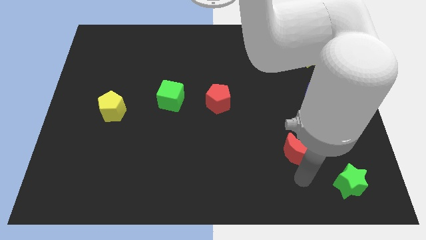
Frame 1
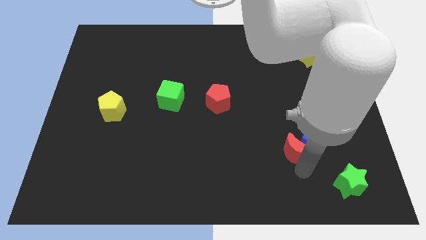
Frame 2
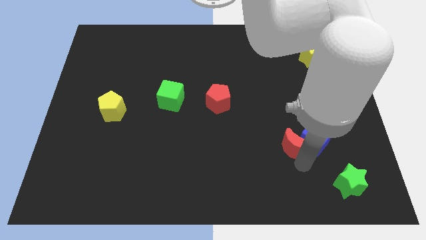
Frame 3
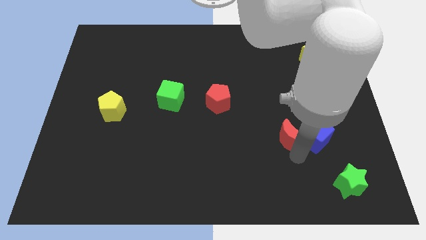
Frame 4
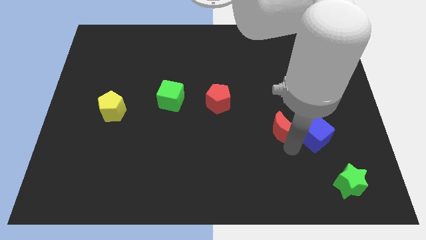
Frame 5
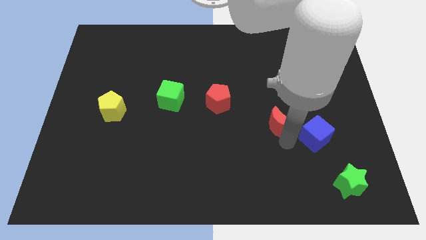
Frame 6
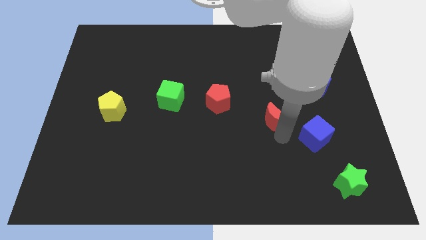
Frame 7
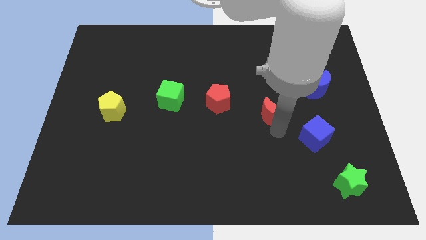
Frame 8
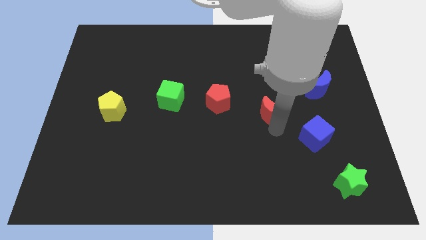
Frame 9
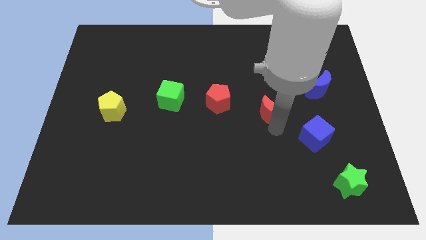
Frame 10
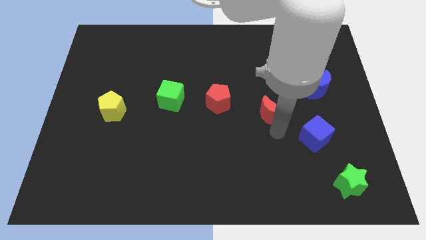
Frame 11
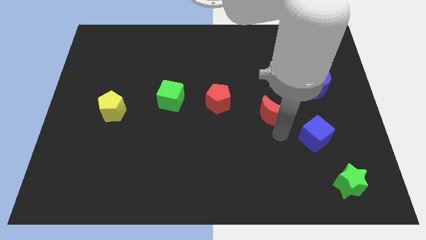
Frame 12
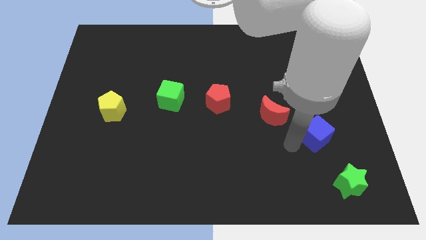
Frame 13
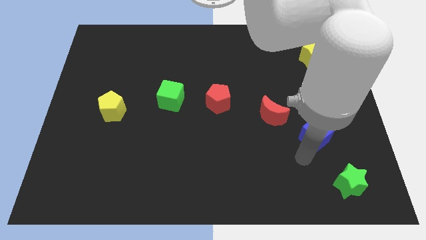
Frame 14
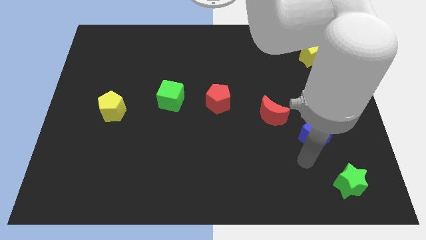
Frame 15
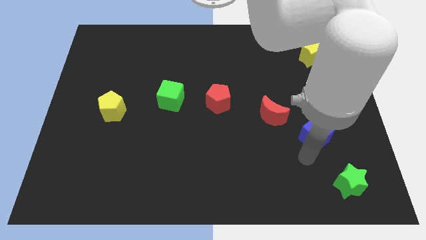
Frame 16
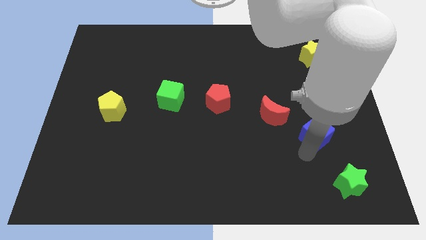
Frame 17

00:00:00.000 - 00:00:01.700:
move the red moon diagonally to the blue cube

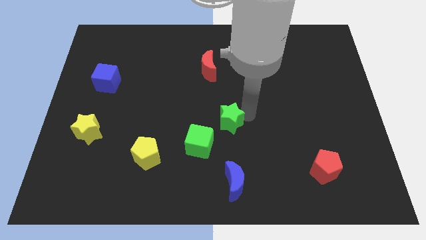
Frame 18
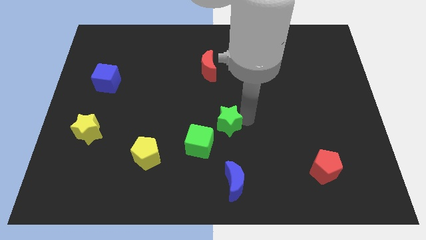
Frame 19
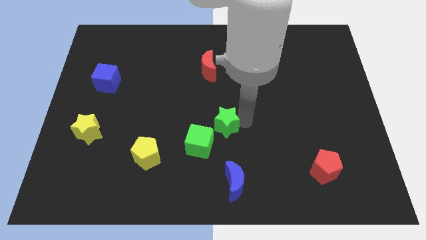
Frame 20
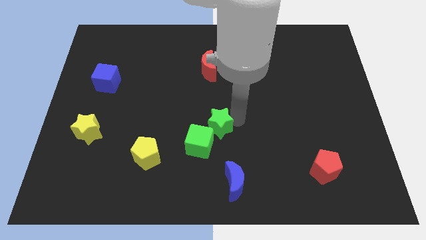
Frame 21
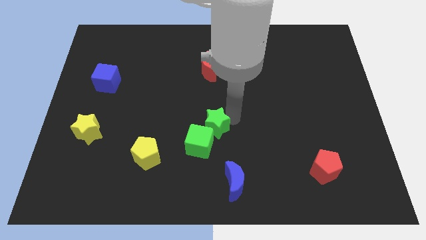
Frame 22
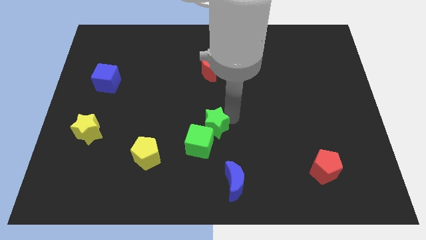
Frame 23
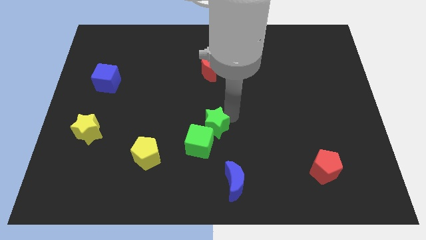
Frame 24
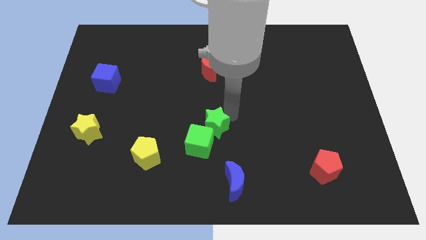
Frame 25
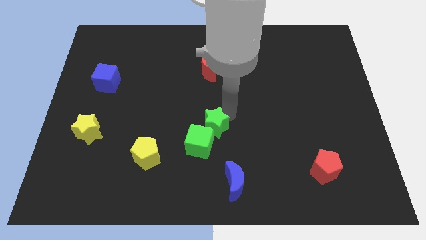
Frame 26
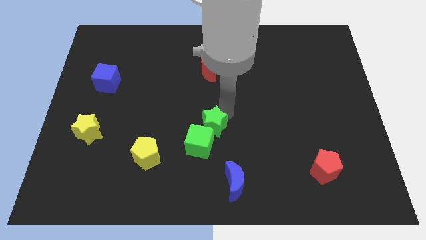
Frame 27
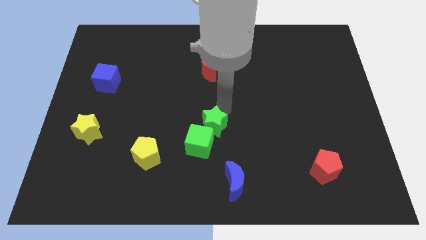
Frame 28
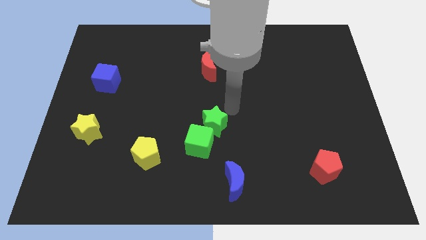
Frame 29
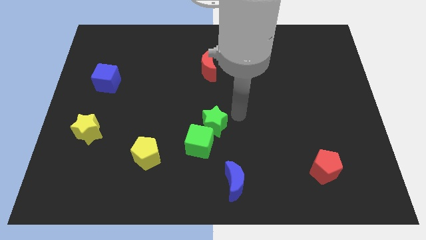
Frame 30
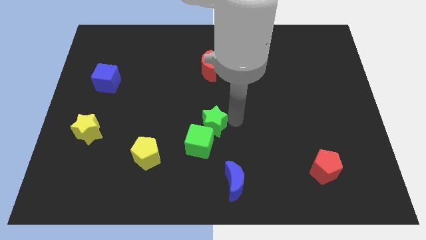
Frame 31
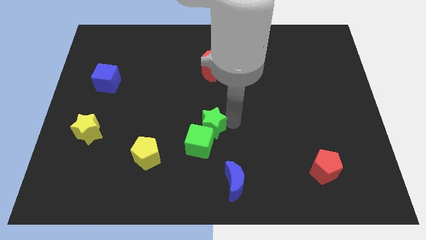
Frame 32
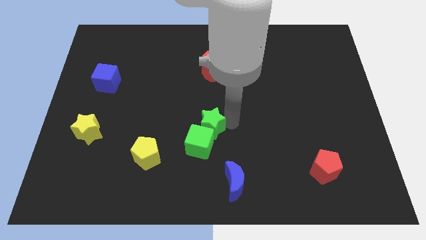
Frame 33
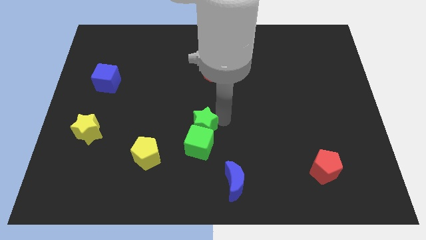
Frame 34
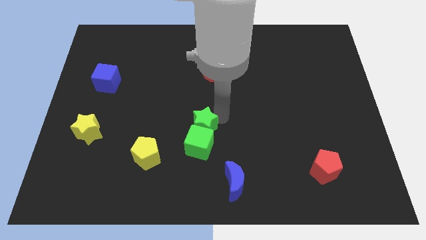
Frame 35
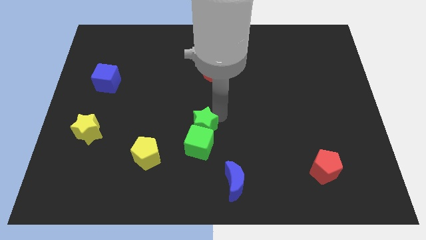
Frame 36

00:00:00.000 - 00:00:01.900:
place green star to the top of green cube

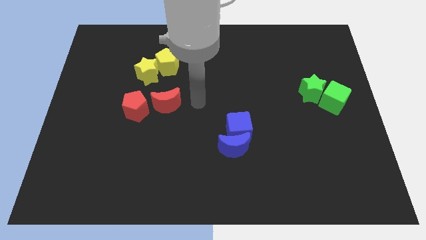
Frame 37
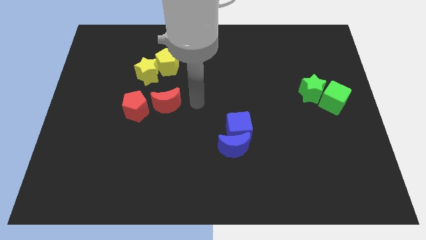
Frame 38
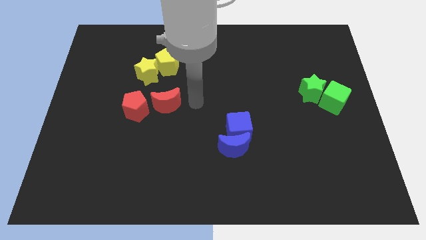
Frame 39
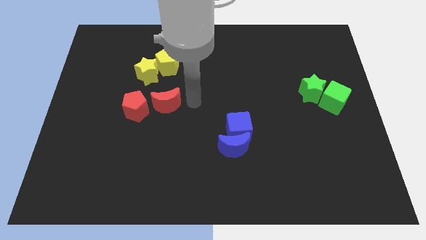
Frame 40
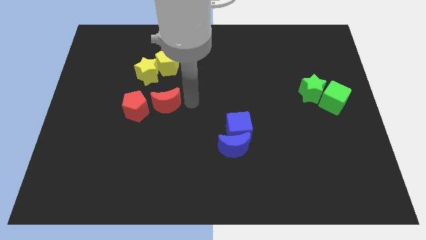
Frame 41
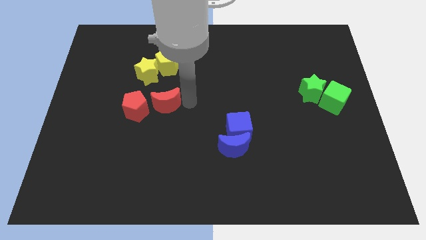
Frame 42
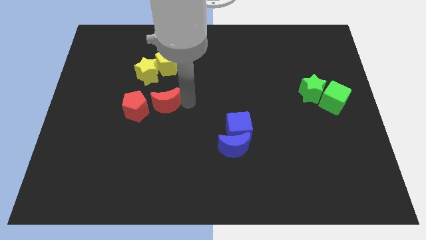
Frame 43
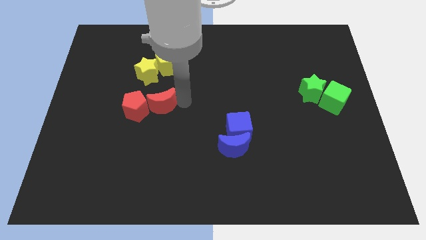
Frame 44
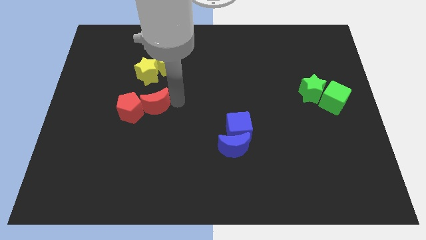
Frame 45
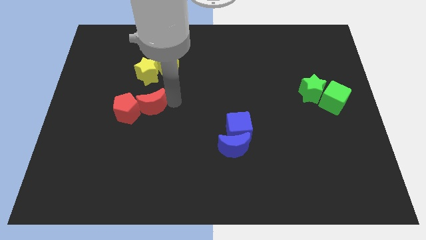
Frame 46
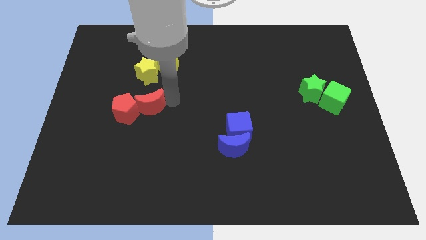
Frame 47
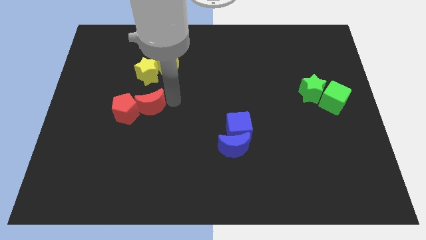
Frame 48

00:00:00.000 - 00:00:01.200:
push the red moon into the red pentagon

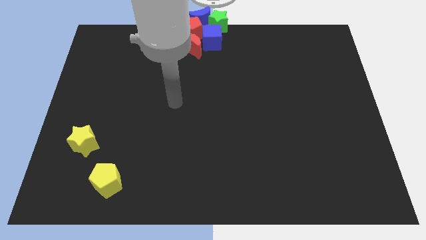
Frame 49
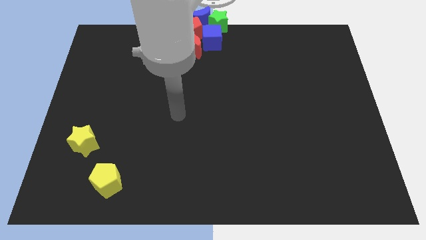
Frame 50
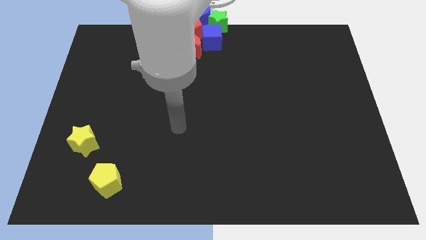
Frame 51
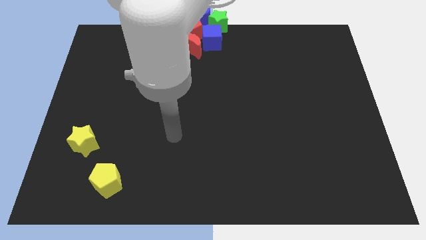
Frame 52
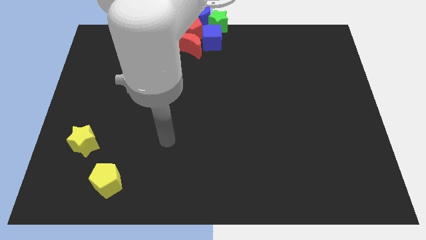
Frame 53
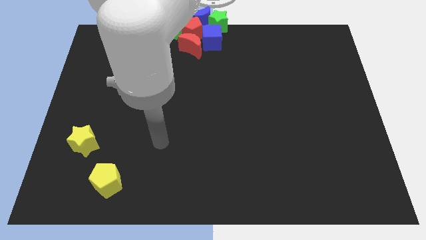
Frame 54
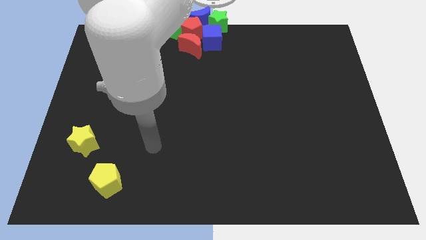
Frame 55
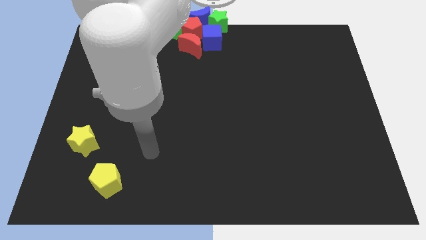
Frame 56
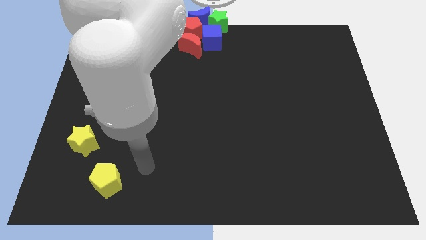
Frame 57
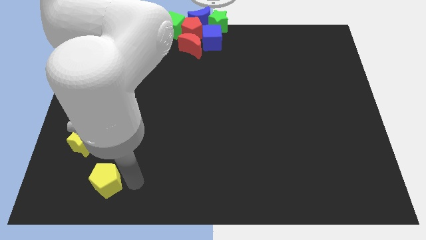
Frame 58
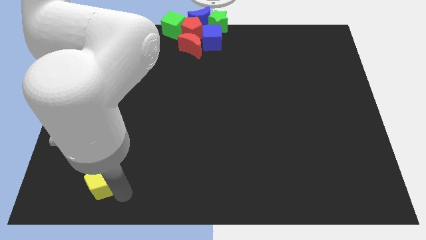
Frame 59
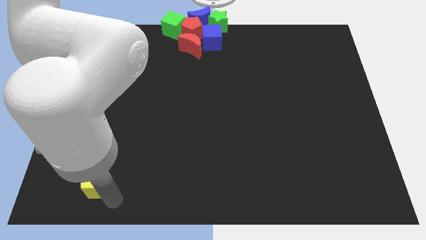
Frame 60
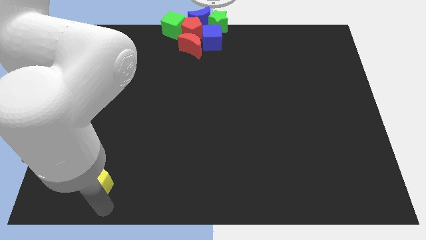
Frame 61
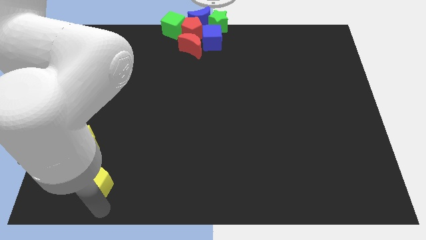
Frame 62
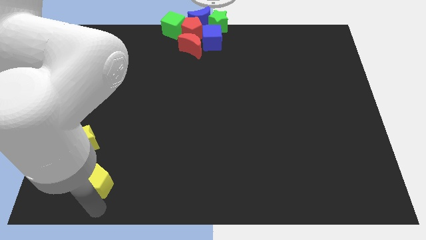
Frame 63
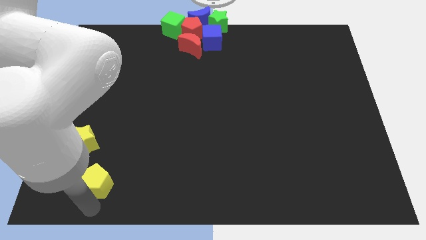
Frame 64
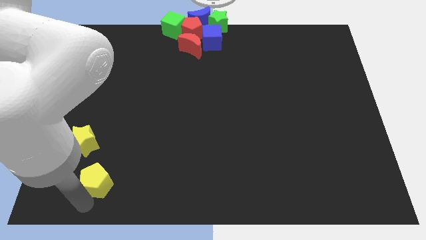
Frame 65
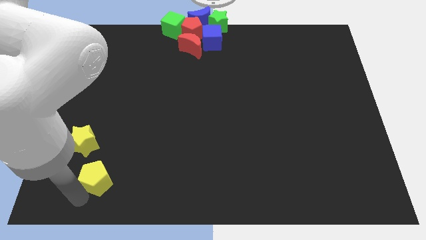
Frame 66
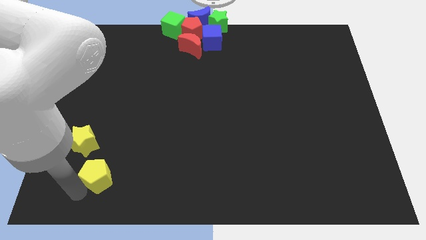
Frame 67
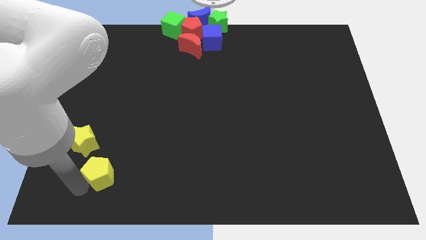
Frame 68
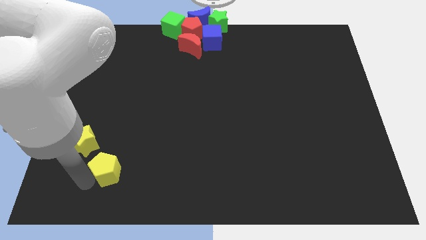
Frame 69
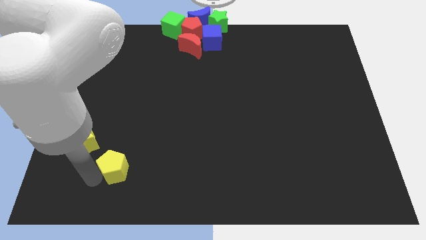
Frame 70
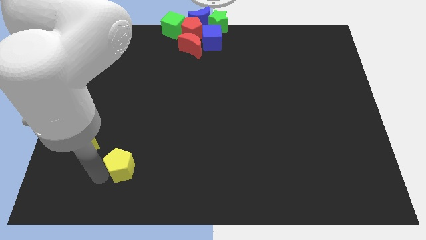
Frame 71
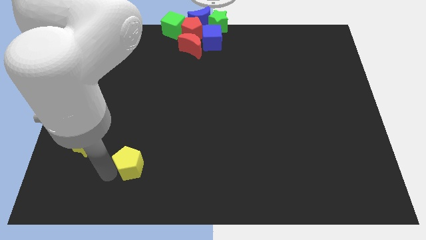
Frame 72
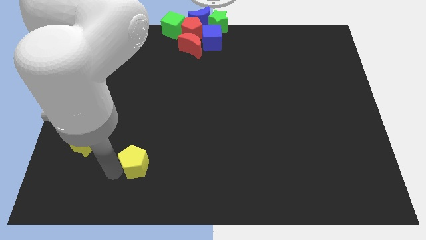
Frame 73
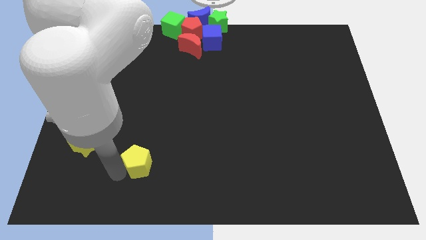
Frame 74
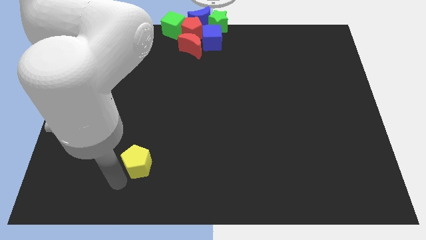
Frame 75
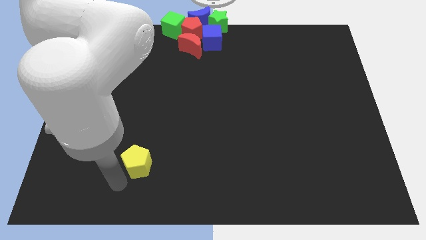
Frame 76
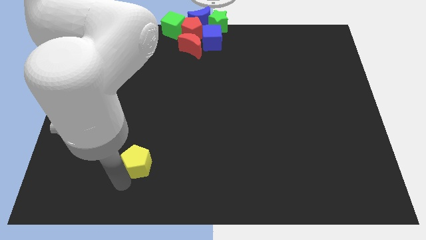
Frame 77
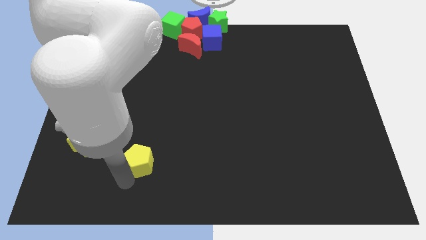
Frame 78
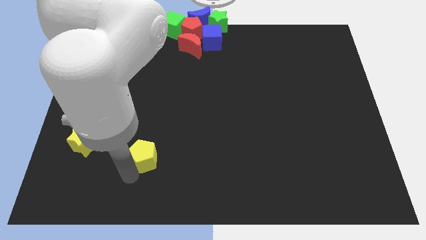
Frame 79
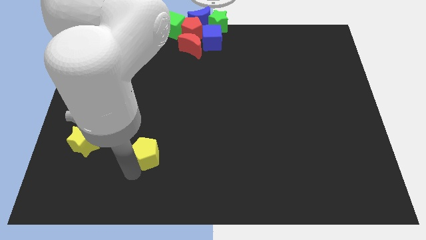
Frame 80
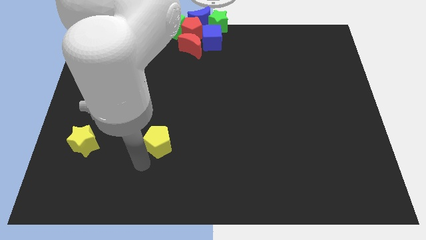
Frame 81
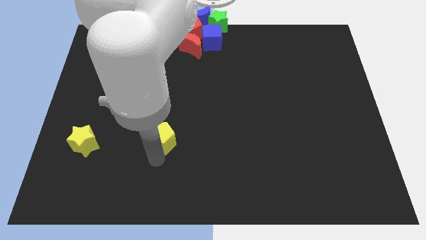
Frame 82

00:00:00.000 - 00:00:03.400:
place the yellow pentagon right to the yellow star

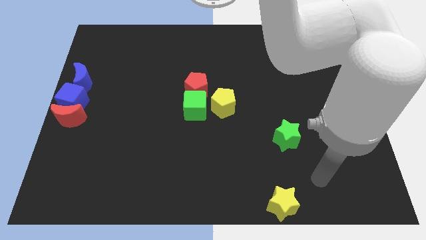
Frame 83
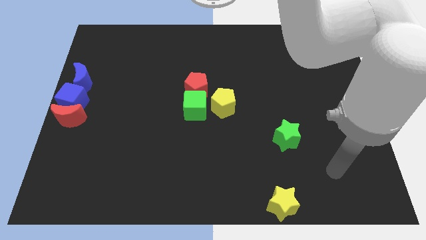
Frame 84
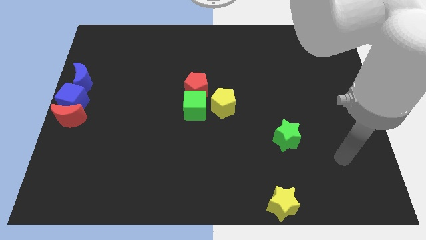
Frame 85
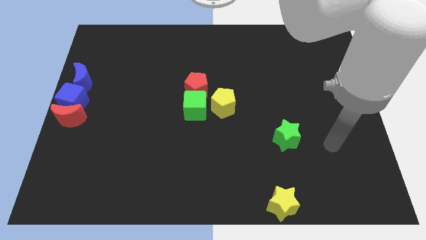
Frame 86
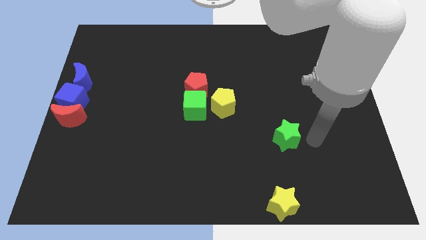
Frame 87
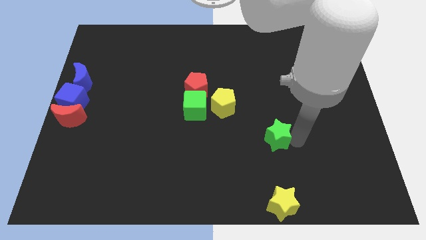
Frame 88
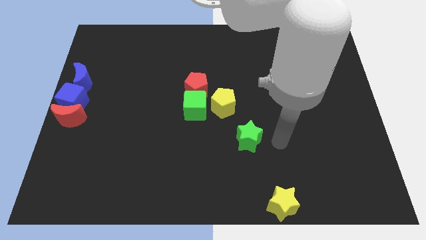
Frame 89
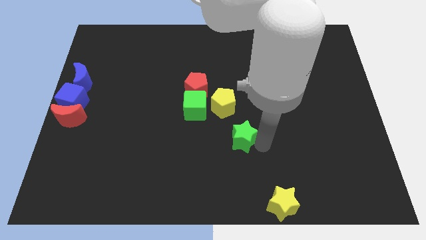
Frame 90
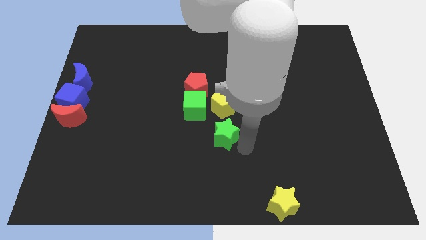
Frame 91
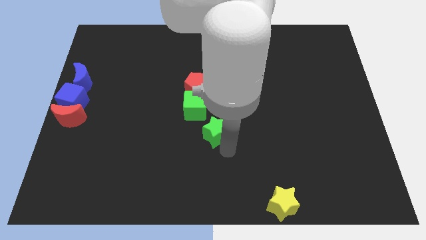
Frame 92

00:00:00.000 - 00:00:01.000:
move the green star below the yellow pentagon
